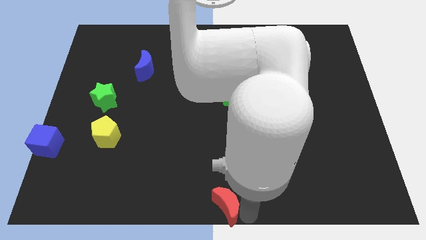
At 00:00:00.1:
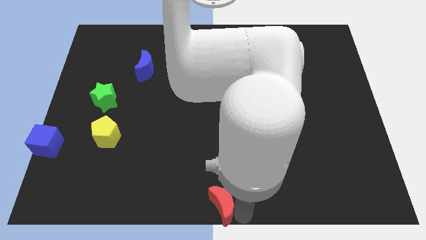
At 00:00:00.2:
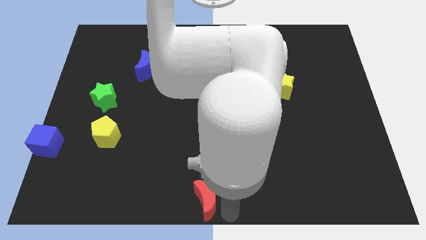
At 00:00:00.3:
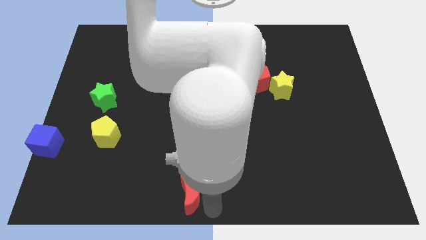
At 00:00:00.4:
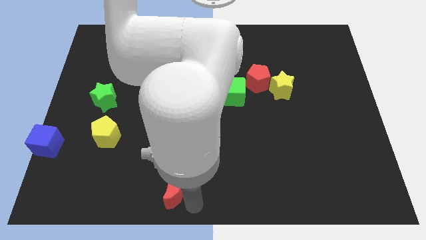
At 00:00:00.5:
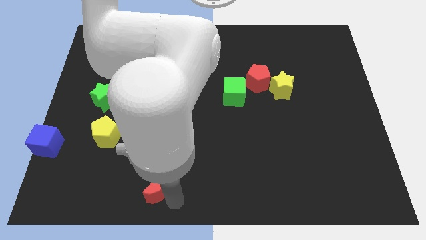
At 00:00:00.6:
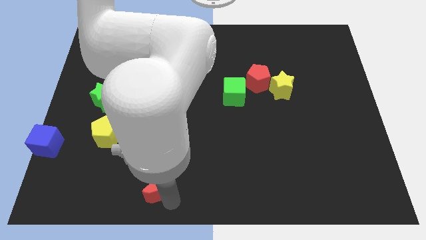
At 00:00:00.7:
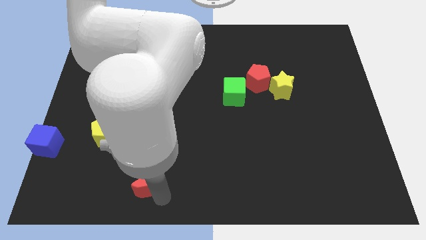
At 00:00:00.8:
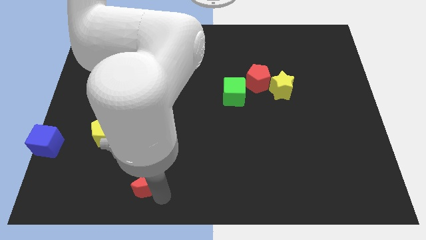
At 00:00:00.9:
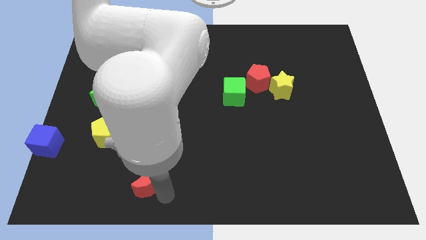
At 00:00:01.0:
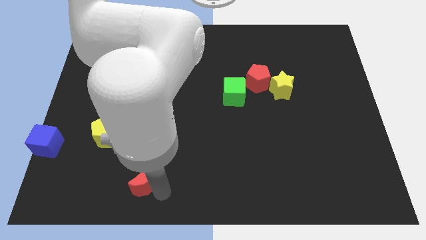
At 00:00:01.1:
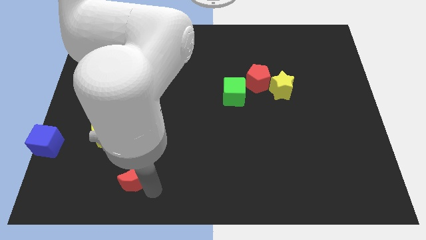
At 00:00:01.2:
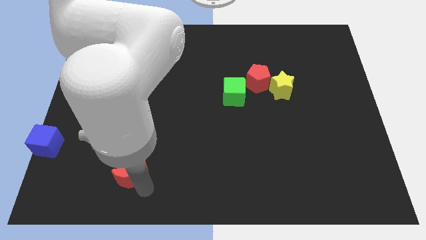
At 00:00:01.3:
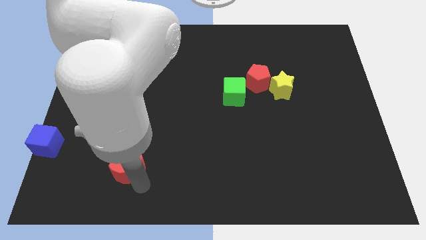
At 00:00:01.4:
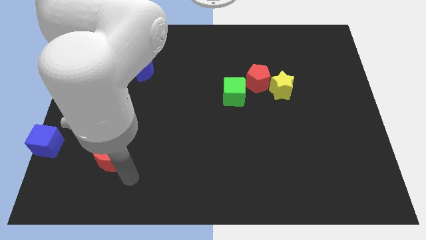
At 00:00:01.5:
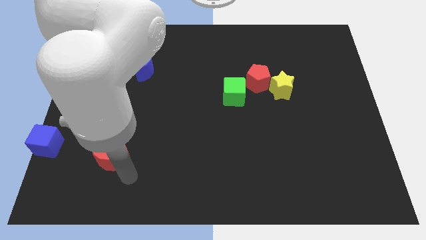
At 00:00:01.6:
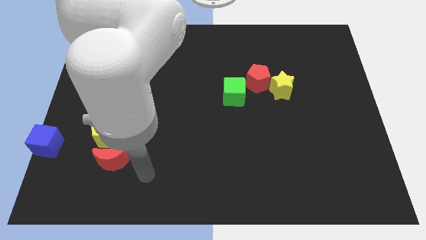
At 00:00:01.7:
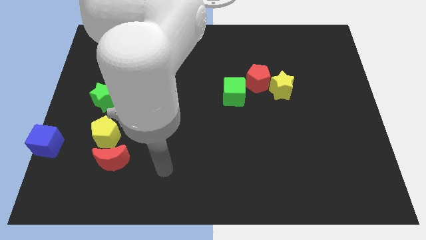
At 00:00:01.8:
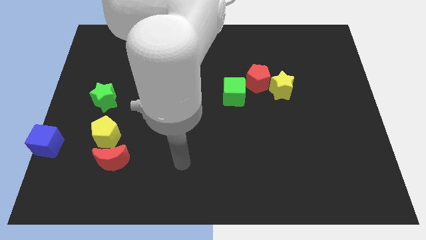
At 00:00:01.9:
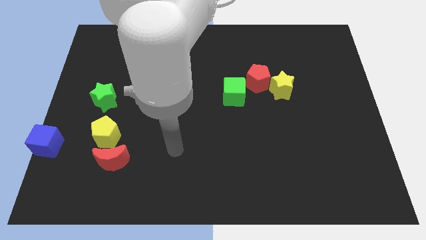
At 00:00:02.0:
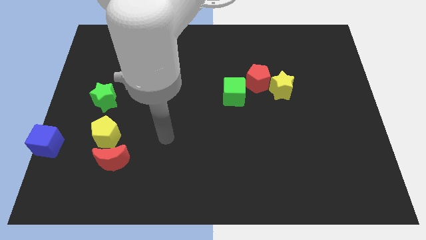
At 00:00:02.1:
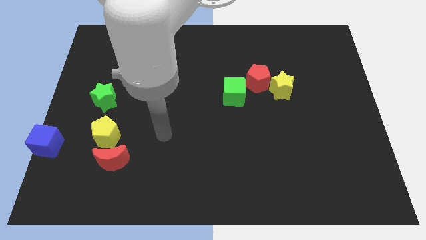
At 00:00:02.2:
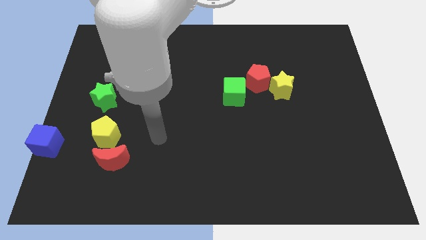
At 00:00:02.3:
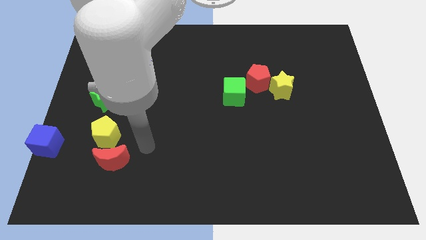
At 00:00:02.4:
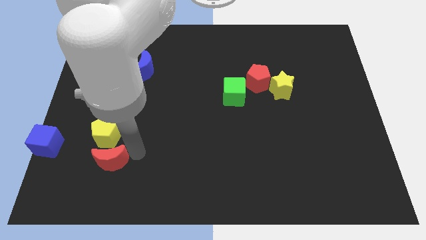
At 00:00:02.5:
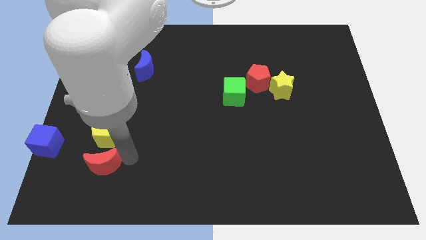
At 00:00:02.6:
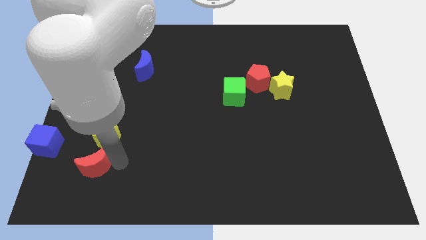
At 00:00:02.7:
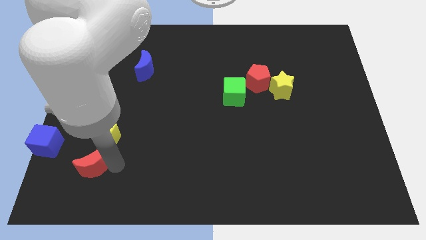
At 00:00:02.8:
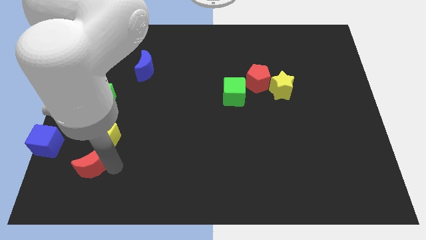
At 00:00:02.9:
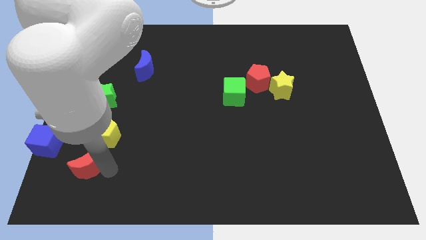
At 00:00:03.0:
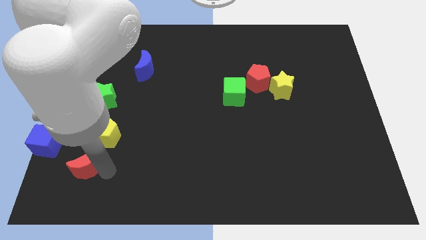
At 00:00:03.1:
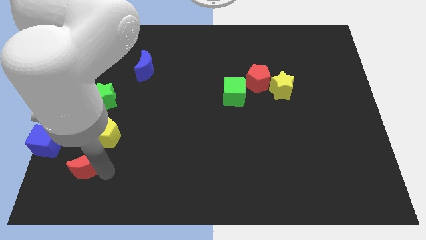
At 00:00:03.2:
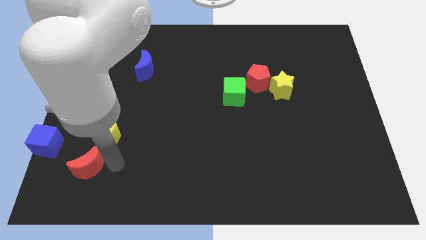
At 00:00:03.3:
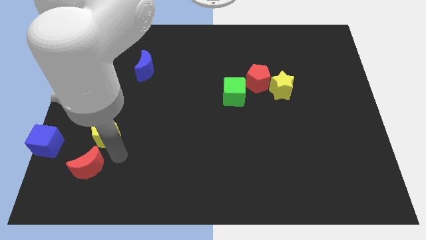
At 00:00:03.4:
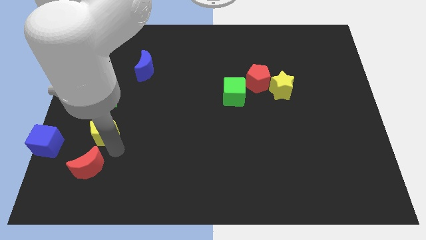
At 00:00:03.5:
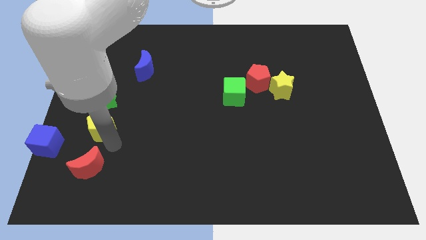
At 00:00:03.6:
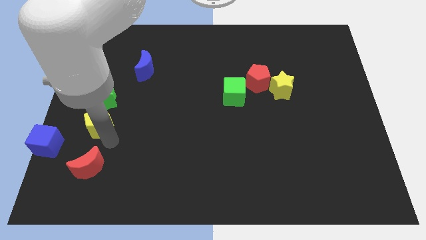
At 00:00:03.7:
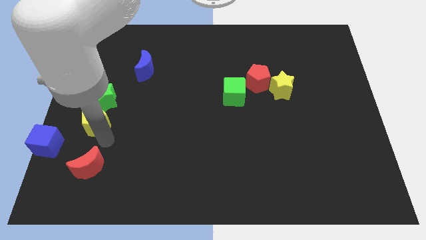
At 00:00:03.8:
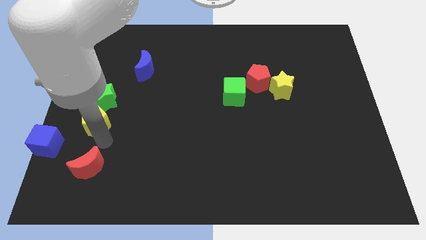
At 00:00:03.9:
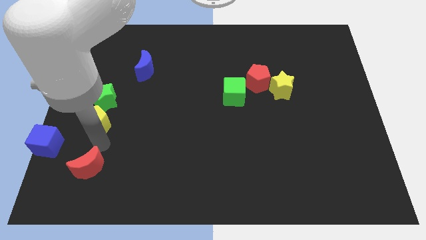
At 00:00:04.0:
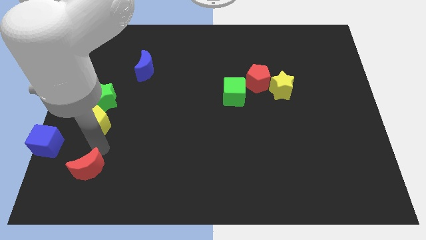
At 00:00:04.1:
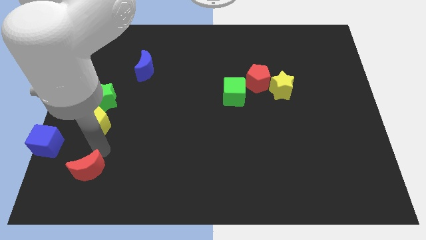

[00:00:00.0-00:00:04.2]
place red moon below the yellow pentagon

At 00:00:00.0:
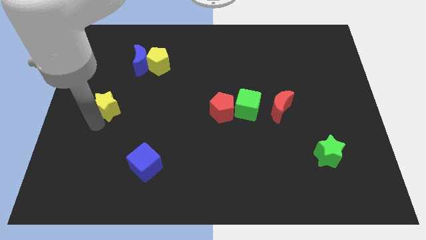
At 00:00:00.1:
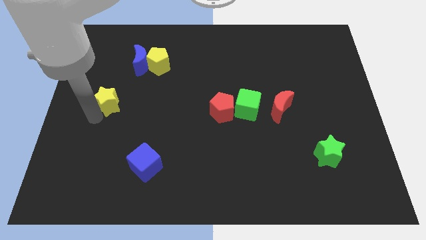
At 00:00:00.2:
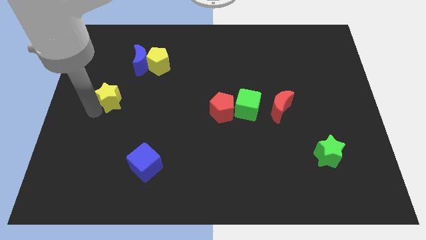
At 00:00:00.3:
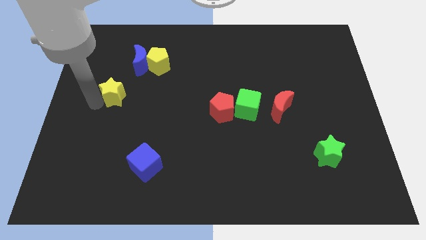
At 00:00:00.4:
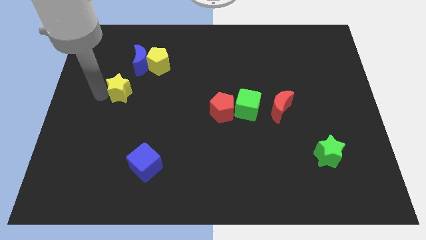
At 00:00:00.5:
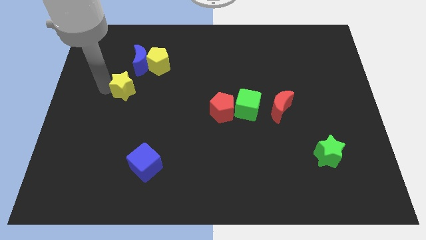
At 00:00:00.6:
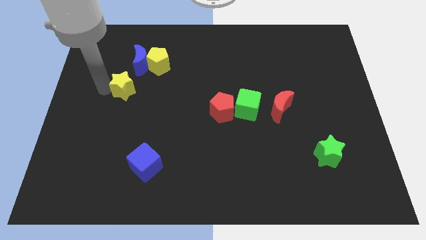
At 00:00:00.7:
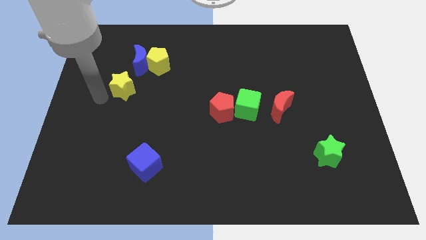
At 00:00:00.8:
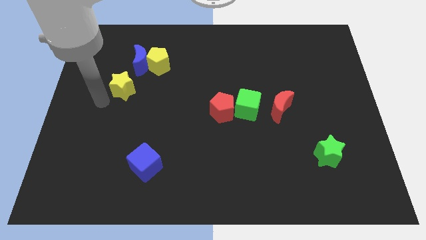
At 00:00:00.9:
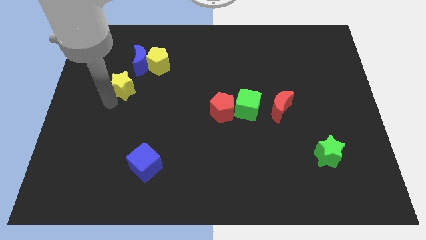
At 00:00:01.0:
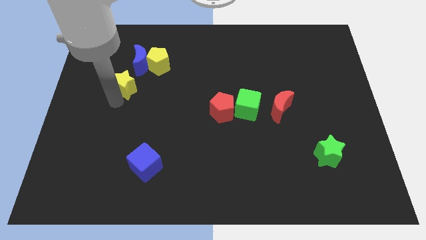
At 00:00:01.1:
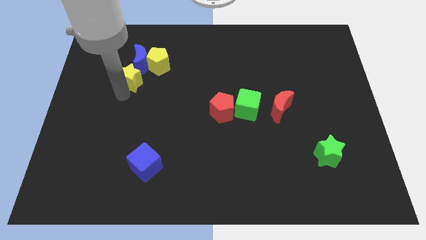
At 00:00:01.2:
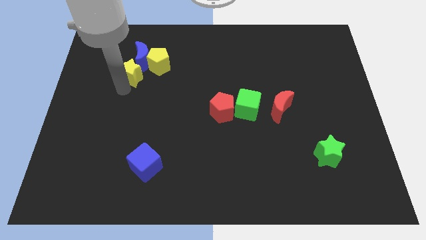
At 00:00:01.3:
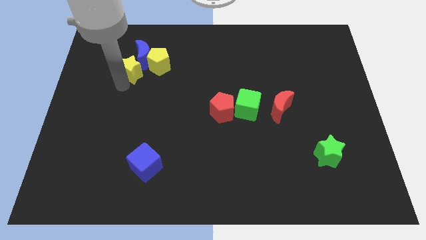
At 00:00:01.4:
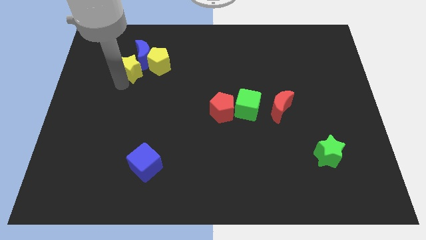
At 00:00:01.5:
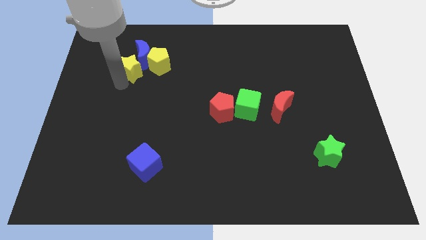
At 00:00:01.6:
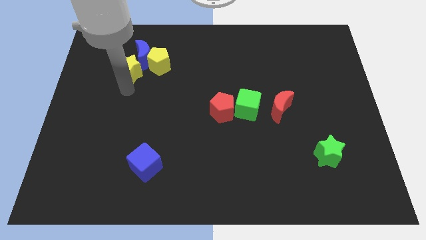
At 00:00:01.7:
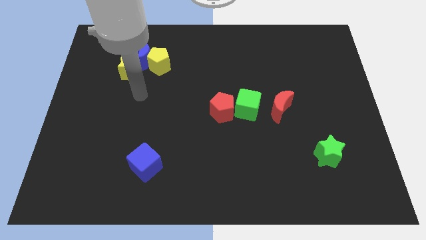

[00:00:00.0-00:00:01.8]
push the yellow star close to the blue crescent

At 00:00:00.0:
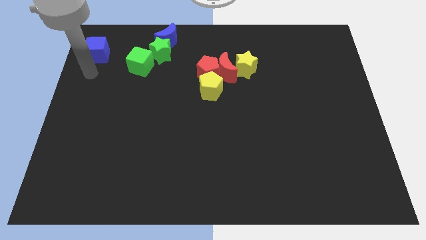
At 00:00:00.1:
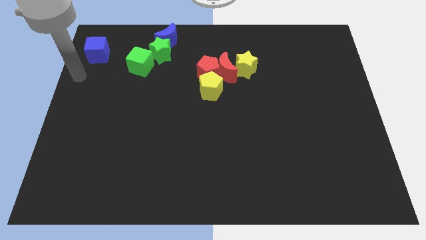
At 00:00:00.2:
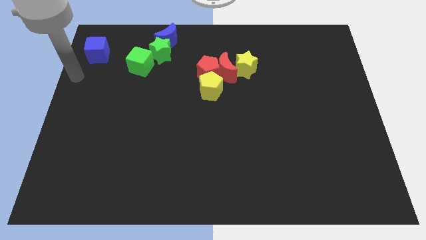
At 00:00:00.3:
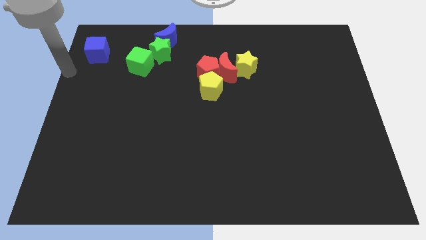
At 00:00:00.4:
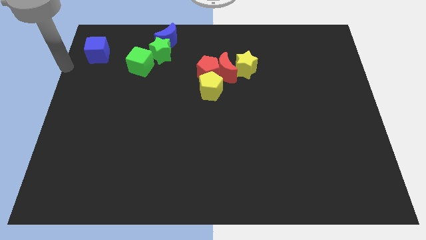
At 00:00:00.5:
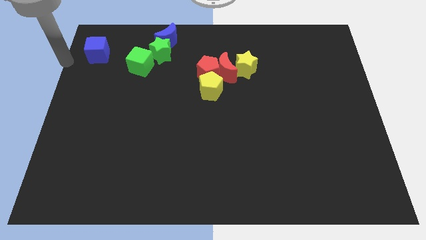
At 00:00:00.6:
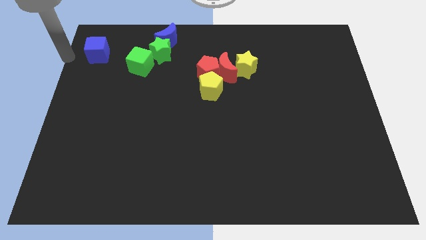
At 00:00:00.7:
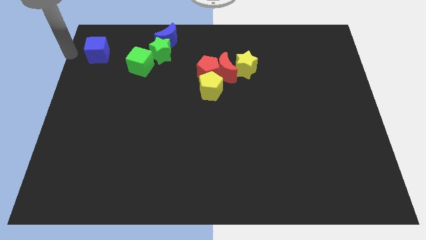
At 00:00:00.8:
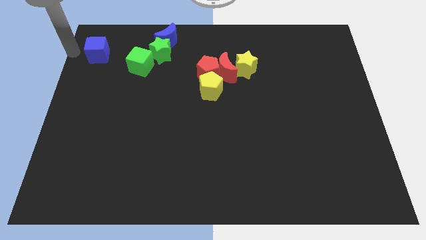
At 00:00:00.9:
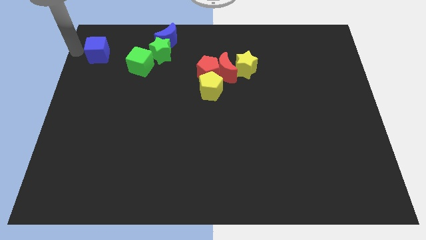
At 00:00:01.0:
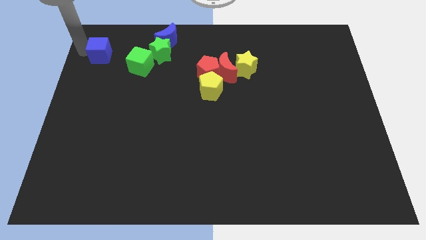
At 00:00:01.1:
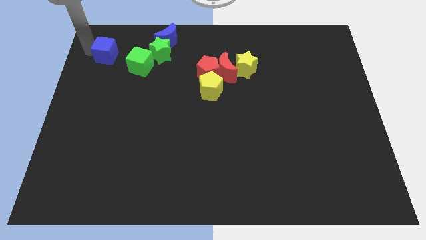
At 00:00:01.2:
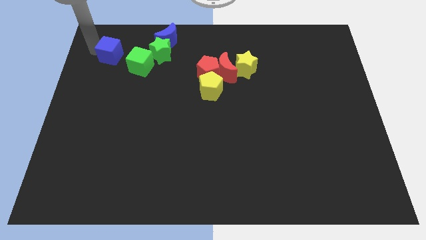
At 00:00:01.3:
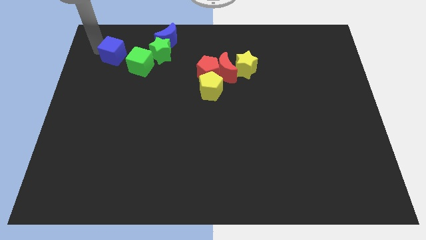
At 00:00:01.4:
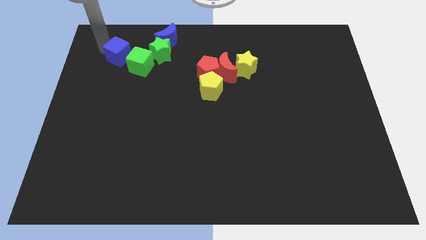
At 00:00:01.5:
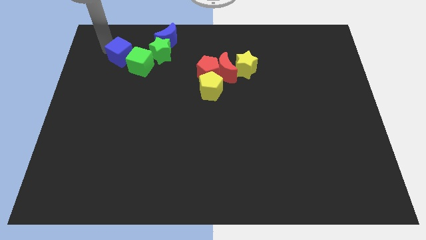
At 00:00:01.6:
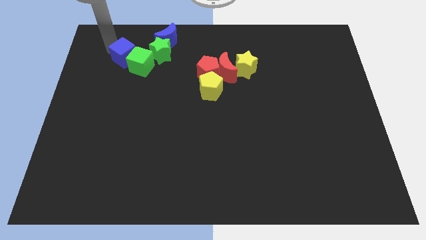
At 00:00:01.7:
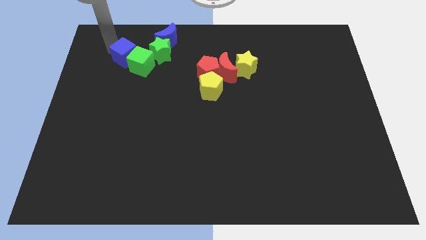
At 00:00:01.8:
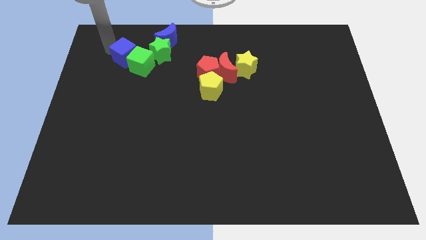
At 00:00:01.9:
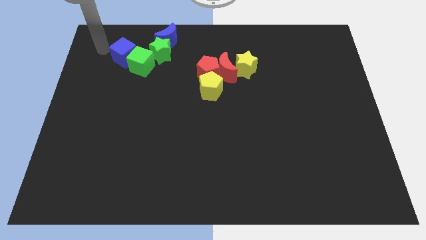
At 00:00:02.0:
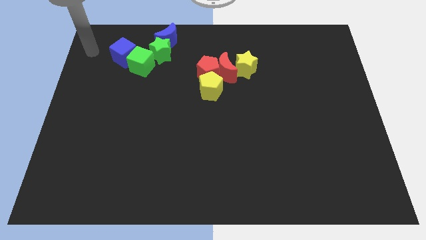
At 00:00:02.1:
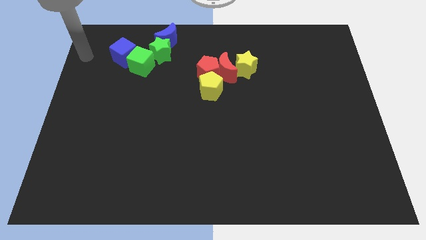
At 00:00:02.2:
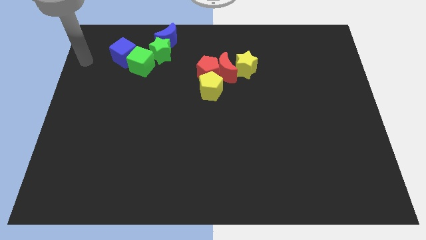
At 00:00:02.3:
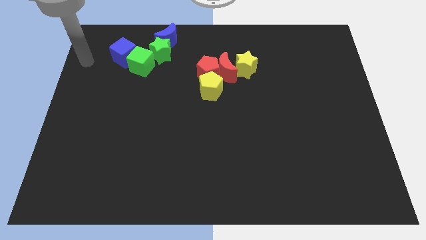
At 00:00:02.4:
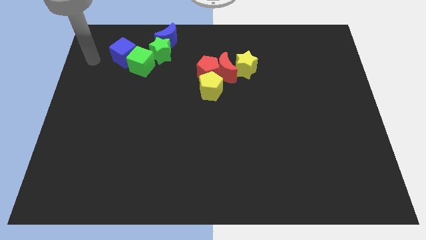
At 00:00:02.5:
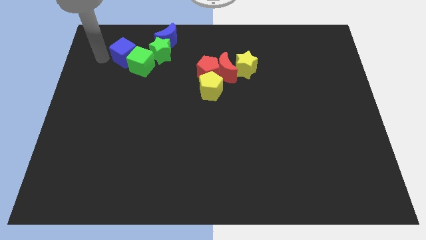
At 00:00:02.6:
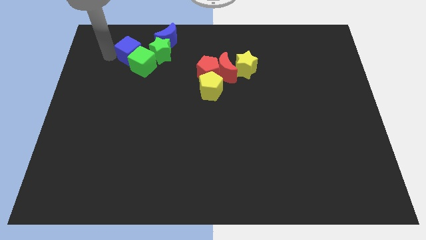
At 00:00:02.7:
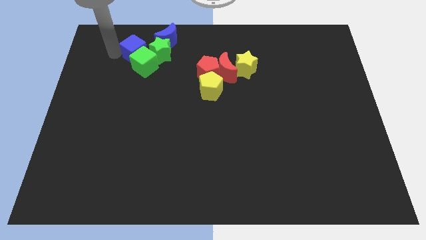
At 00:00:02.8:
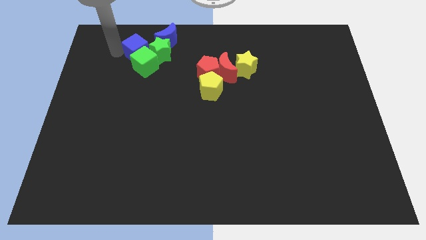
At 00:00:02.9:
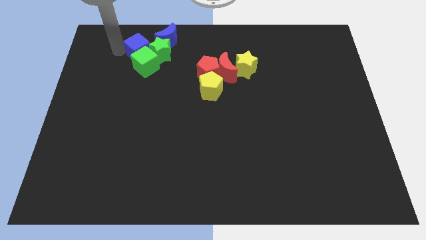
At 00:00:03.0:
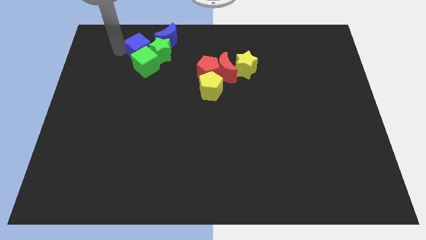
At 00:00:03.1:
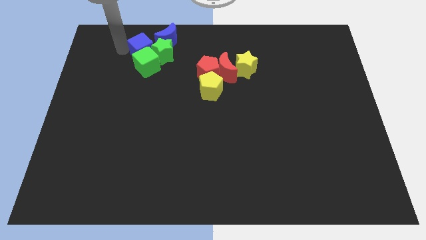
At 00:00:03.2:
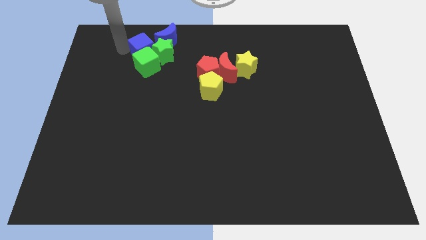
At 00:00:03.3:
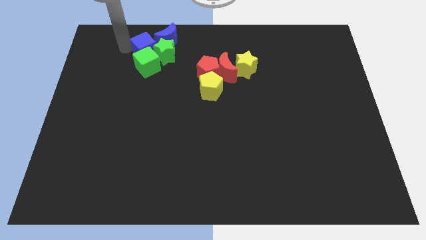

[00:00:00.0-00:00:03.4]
slightly push the blue cube into the green cube
